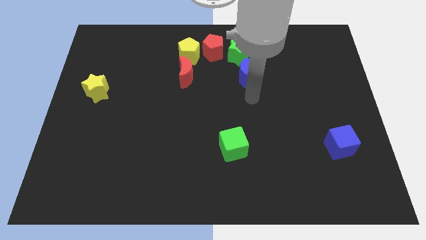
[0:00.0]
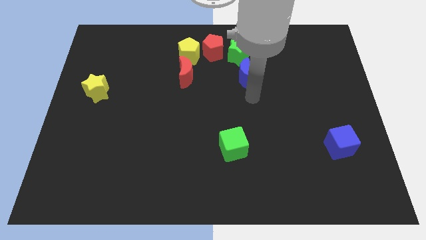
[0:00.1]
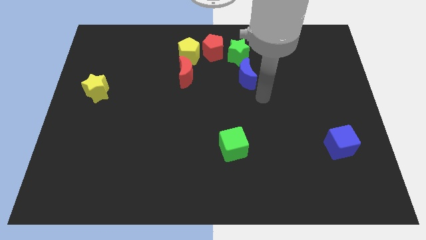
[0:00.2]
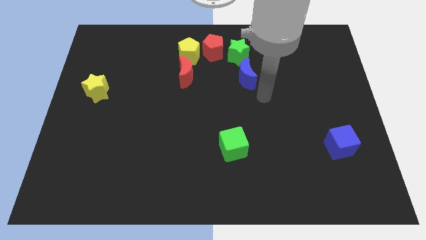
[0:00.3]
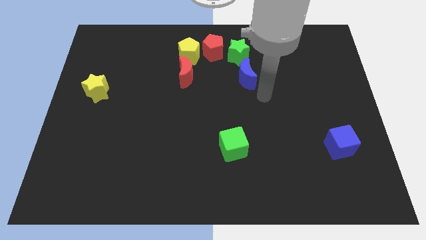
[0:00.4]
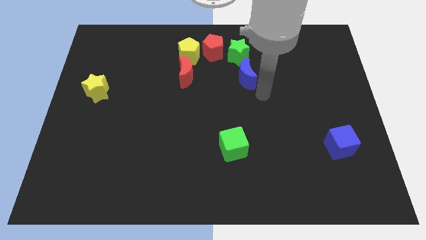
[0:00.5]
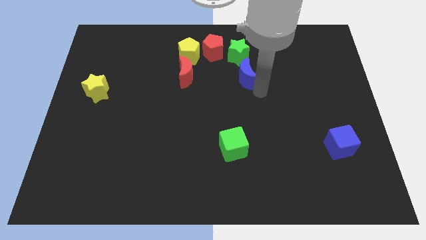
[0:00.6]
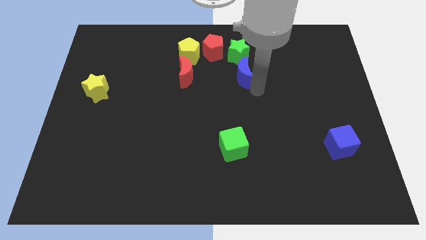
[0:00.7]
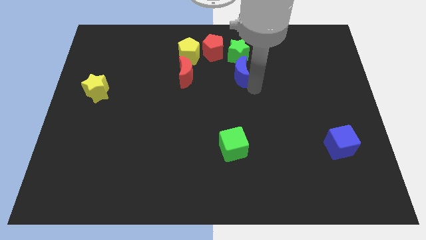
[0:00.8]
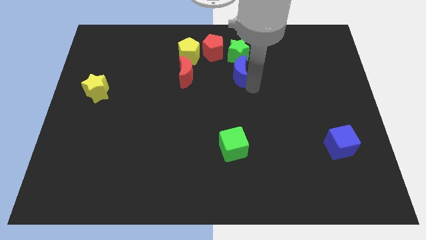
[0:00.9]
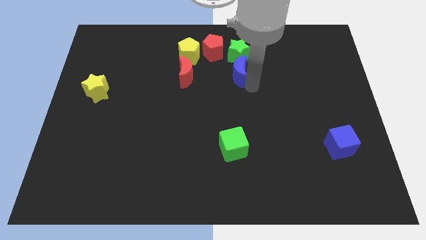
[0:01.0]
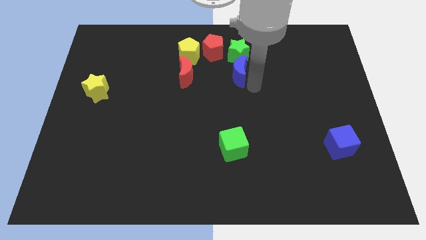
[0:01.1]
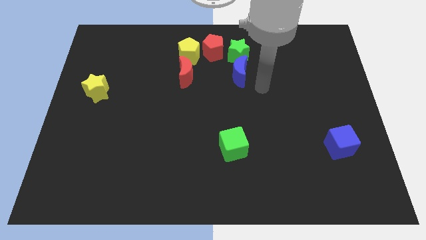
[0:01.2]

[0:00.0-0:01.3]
place the blue moon to the bottom below the green star

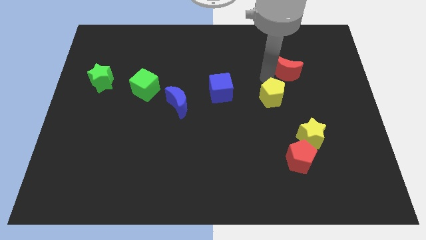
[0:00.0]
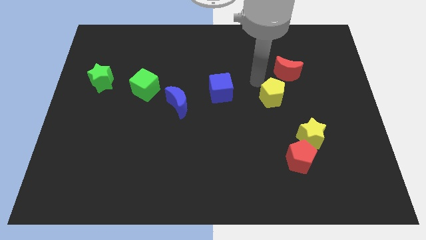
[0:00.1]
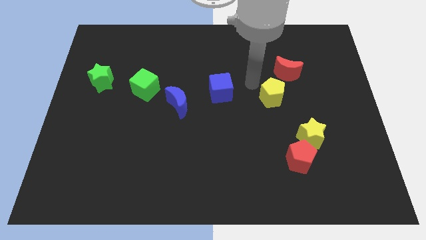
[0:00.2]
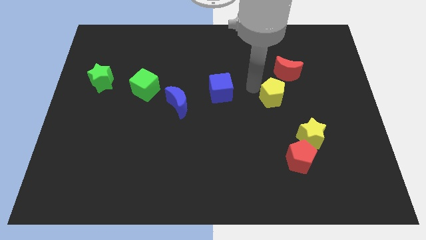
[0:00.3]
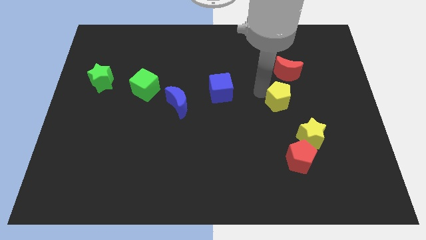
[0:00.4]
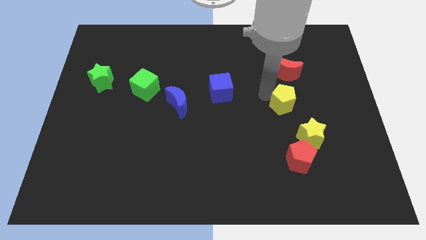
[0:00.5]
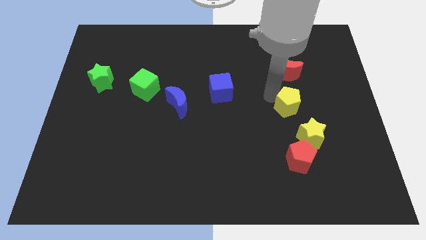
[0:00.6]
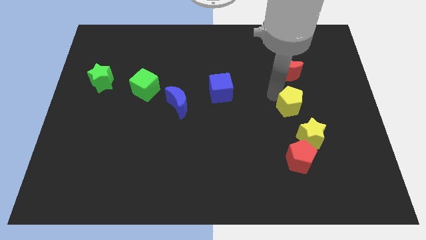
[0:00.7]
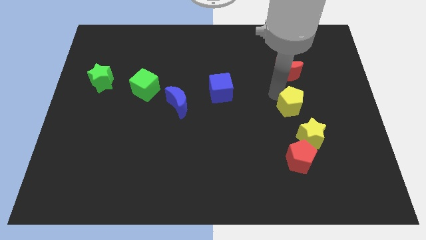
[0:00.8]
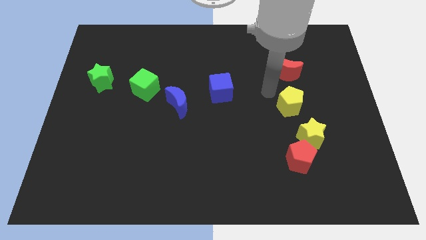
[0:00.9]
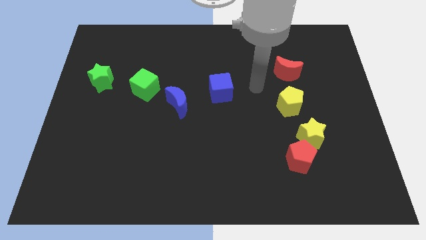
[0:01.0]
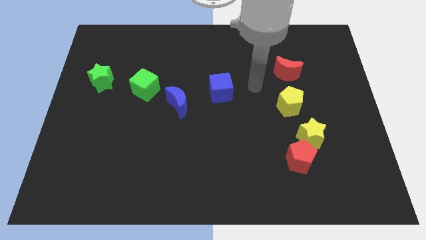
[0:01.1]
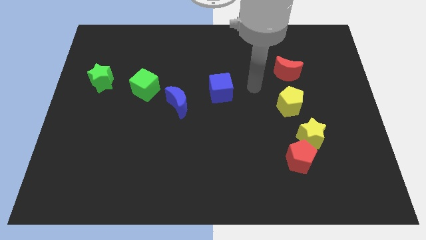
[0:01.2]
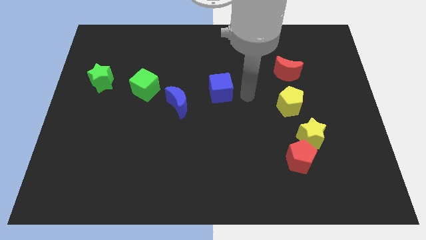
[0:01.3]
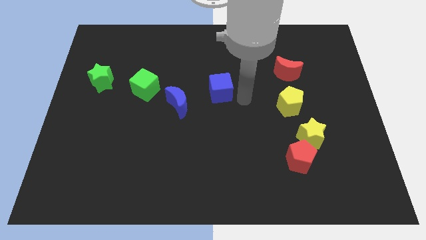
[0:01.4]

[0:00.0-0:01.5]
place the yellow pentagon below the red moon

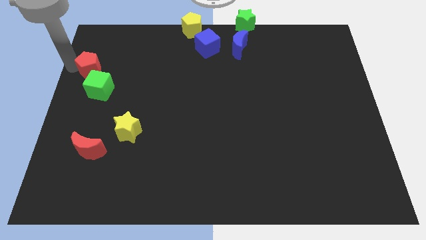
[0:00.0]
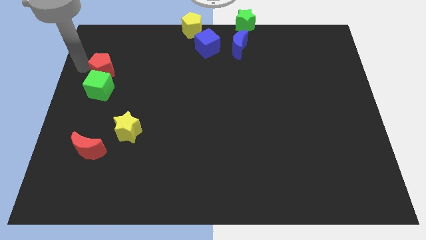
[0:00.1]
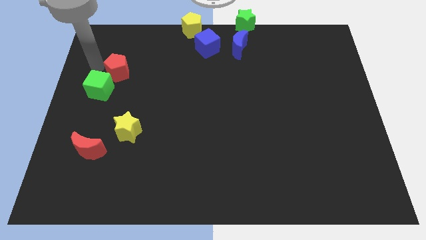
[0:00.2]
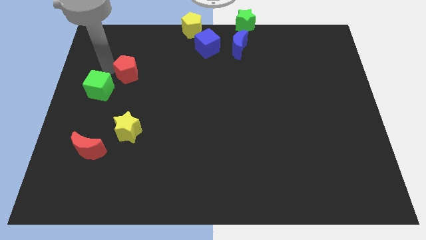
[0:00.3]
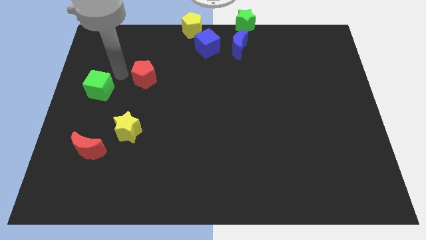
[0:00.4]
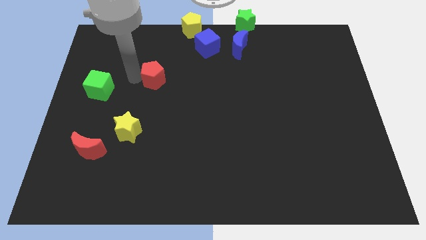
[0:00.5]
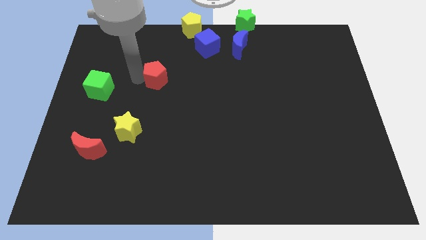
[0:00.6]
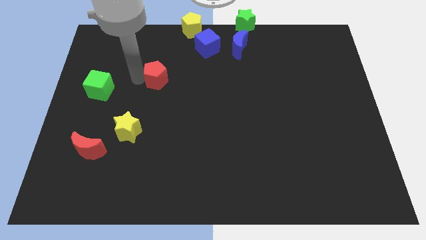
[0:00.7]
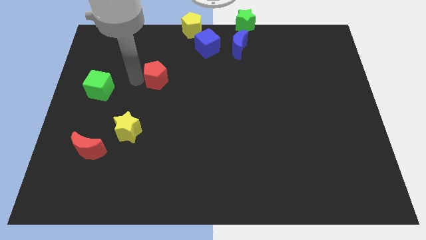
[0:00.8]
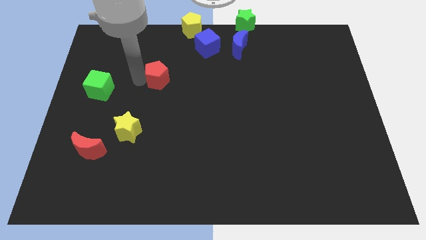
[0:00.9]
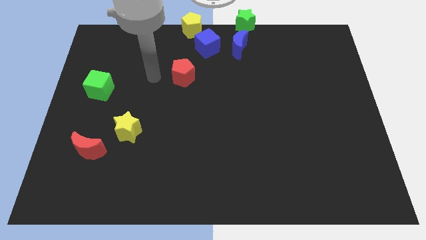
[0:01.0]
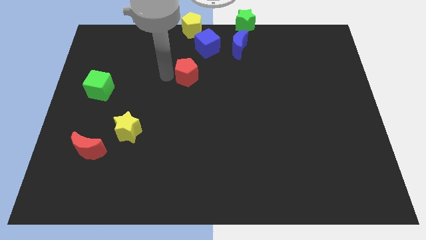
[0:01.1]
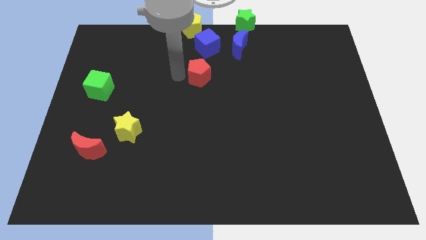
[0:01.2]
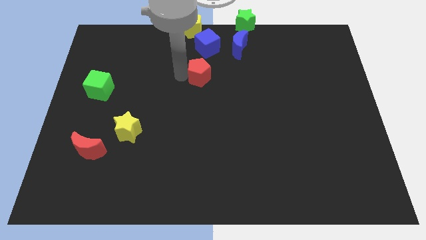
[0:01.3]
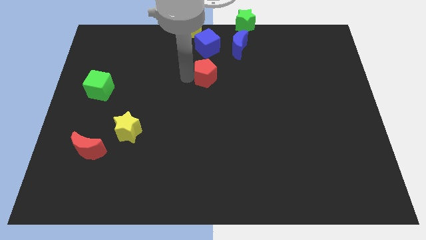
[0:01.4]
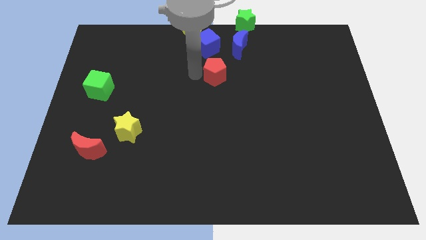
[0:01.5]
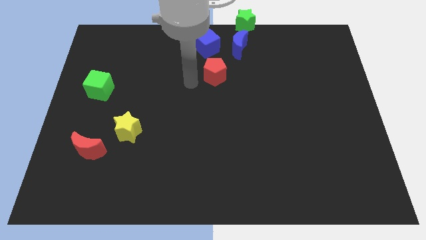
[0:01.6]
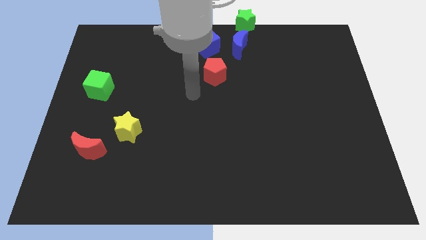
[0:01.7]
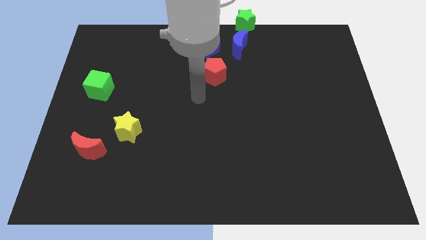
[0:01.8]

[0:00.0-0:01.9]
place red pentagon below blue cube

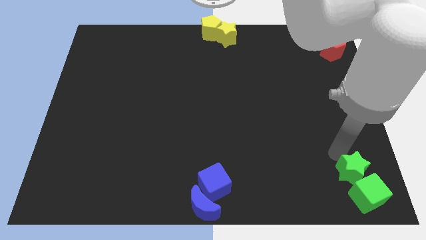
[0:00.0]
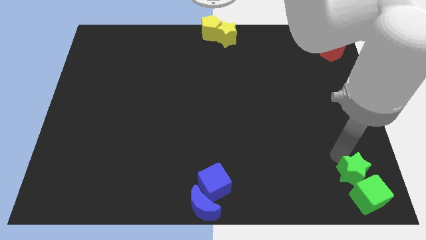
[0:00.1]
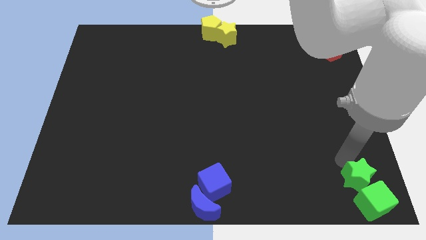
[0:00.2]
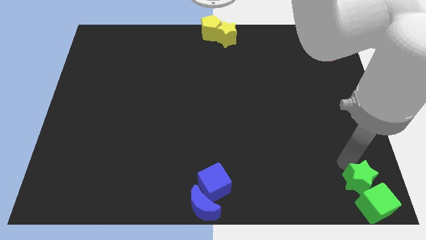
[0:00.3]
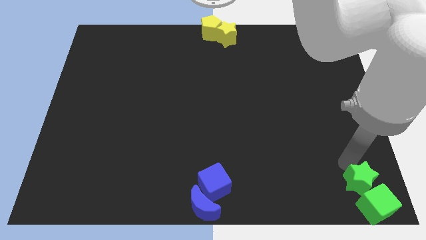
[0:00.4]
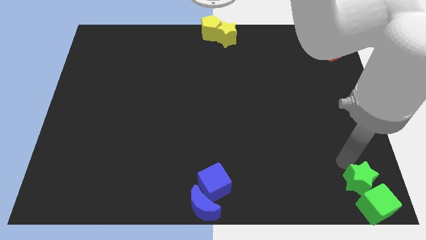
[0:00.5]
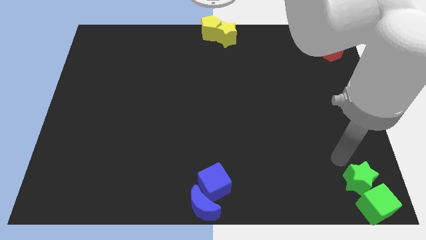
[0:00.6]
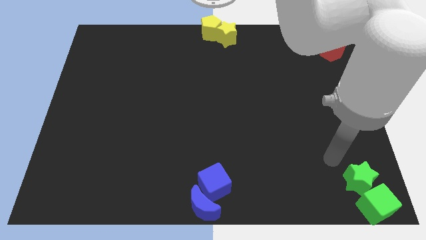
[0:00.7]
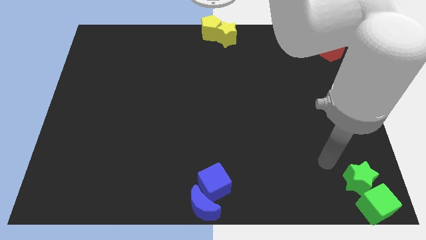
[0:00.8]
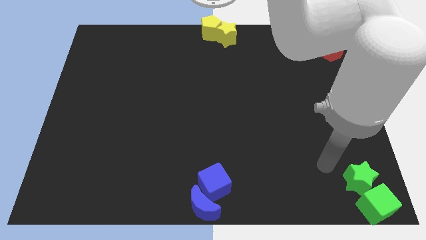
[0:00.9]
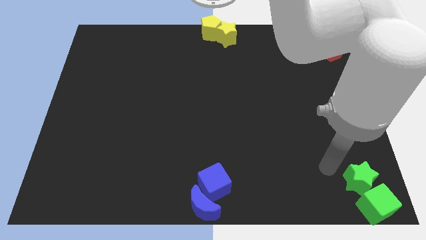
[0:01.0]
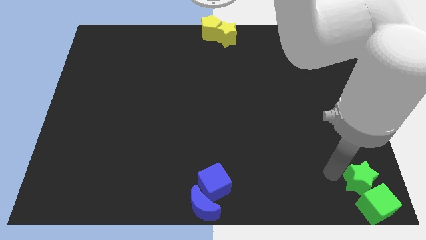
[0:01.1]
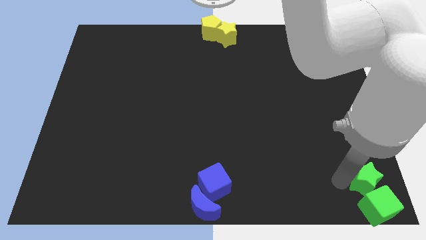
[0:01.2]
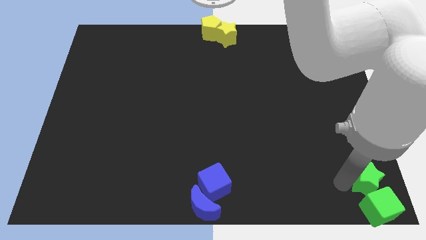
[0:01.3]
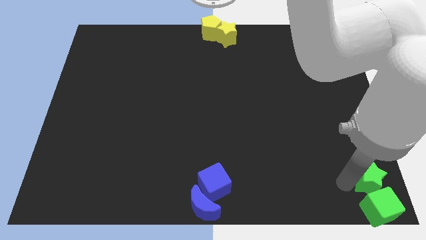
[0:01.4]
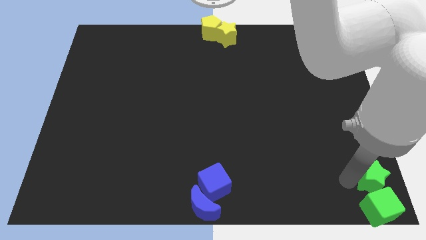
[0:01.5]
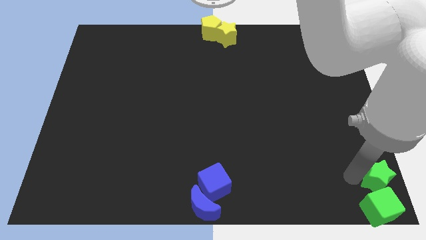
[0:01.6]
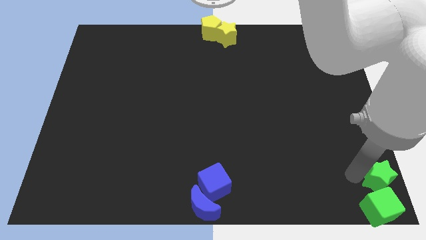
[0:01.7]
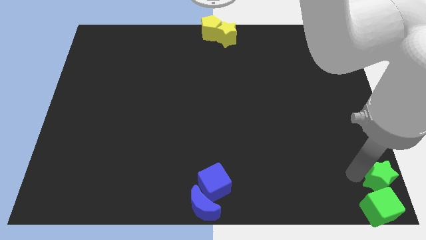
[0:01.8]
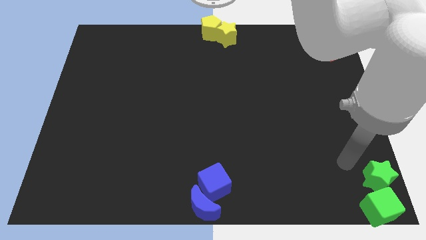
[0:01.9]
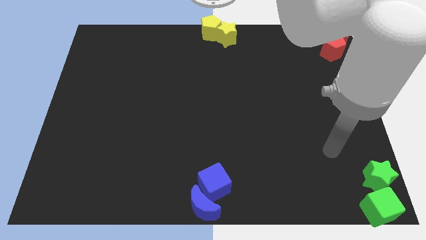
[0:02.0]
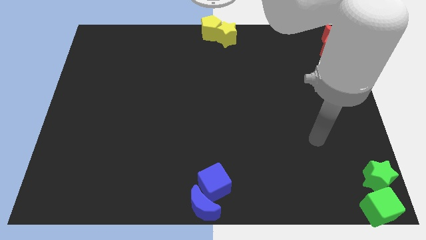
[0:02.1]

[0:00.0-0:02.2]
move the green star into the green cube

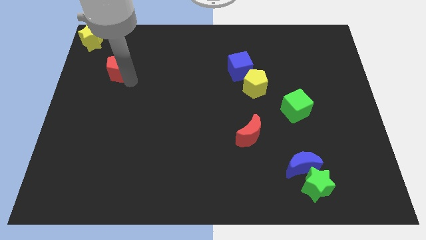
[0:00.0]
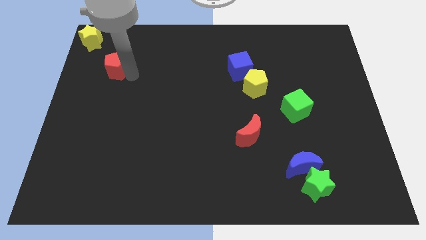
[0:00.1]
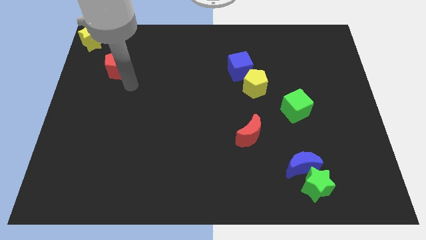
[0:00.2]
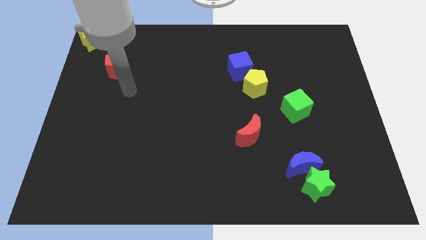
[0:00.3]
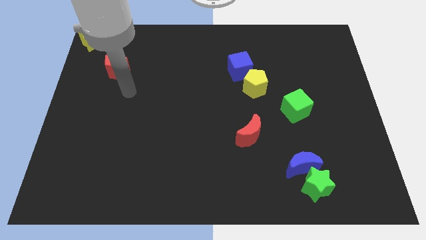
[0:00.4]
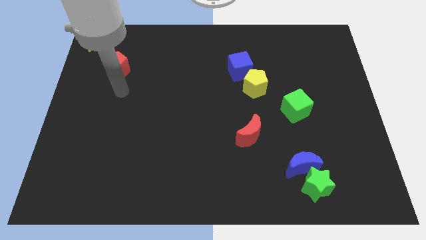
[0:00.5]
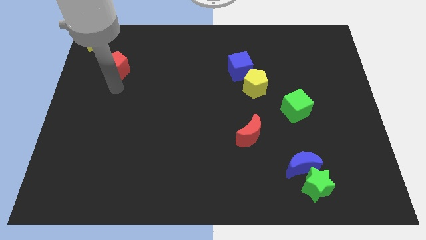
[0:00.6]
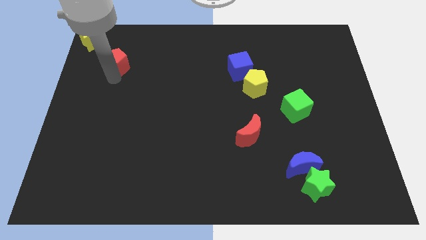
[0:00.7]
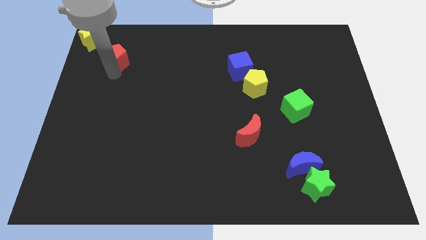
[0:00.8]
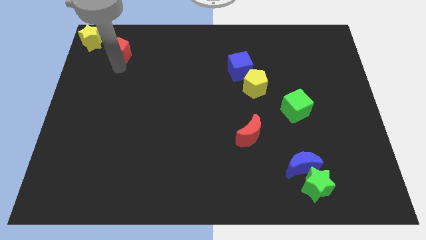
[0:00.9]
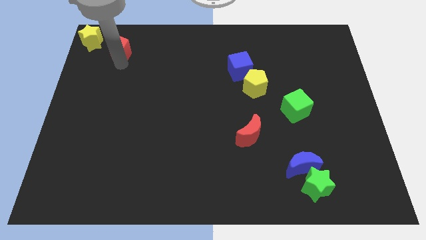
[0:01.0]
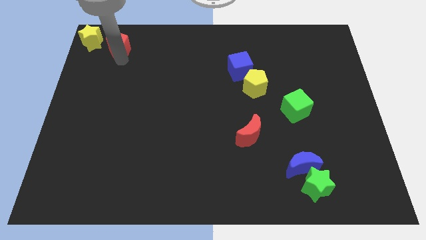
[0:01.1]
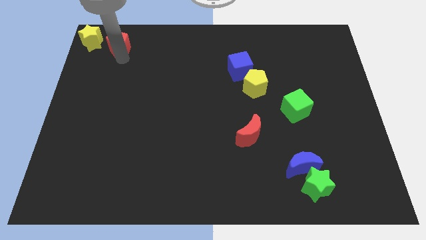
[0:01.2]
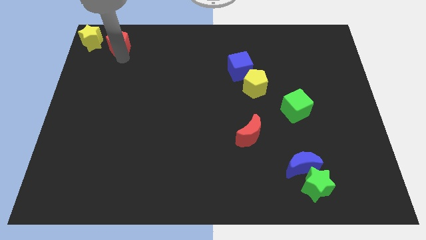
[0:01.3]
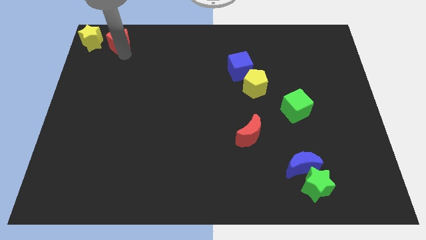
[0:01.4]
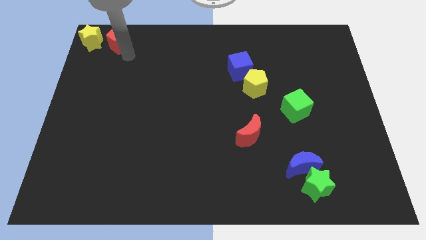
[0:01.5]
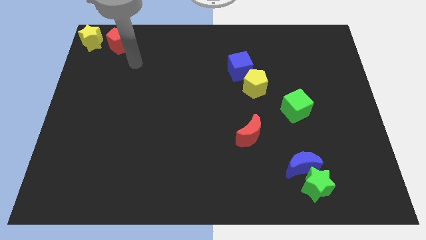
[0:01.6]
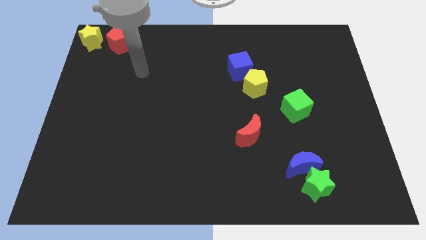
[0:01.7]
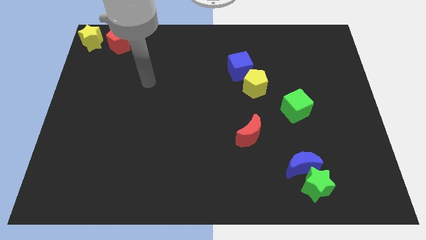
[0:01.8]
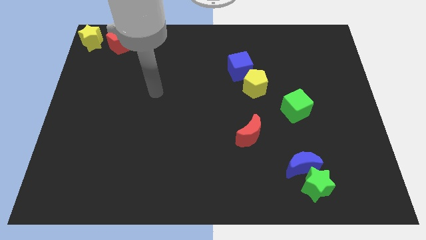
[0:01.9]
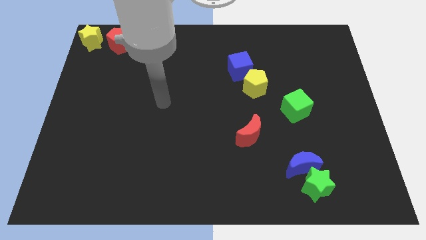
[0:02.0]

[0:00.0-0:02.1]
put the red pentagon right to the yellow star
